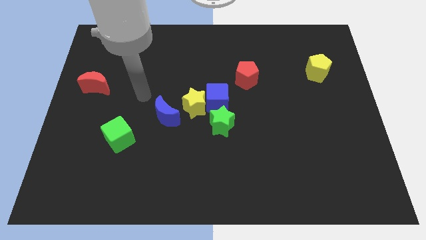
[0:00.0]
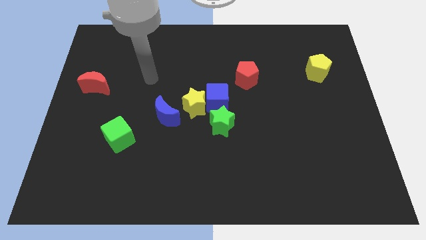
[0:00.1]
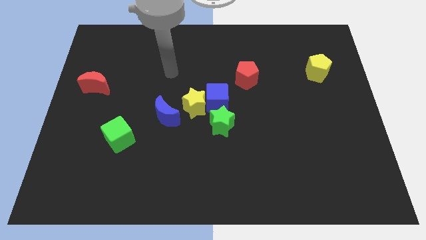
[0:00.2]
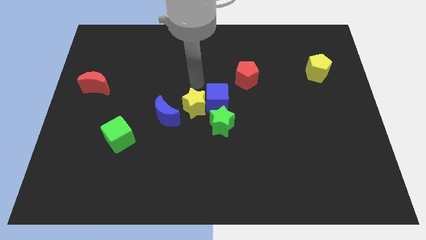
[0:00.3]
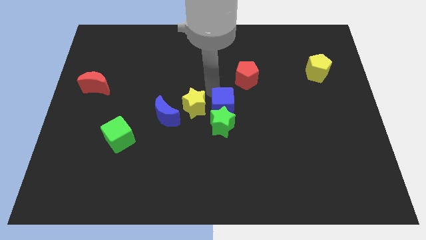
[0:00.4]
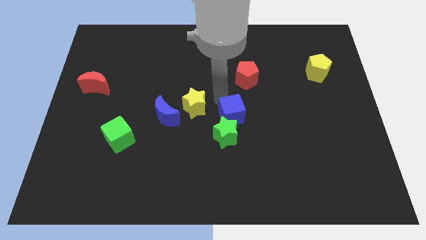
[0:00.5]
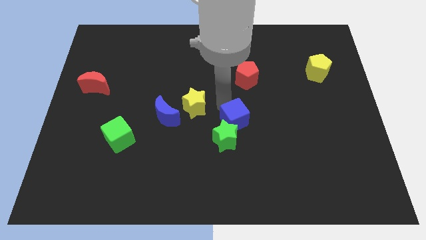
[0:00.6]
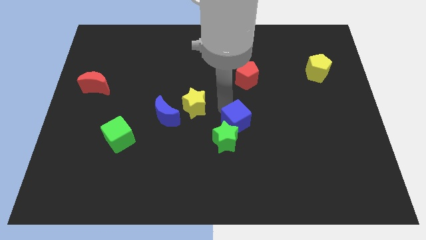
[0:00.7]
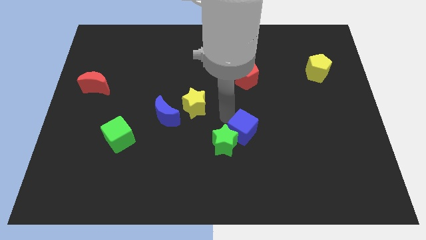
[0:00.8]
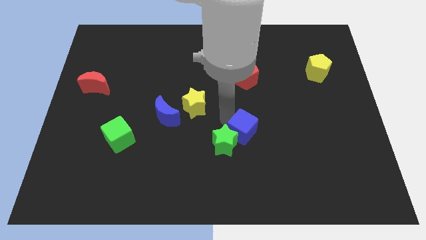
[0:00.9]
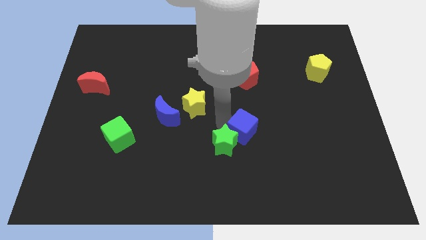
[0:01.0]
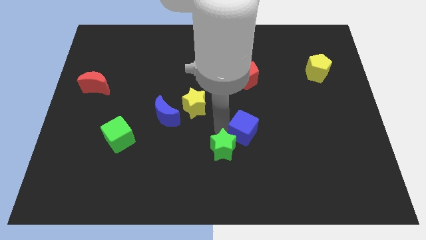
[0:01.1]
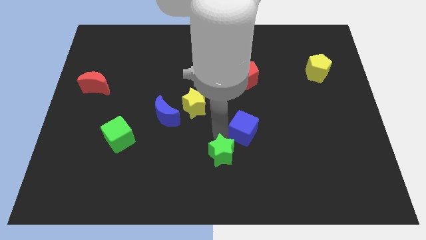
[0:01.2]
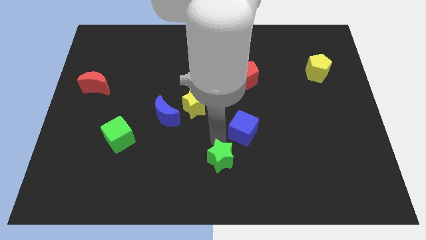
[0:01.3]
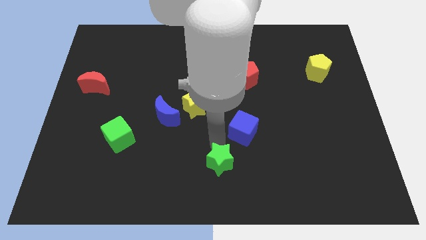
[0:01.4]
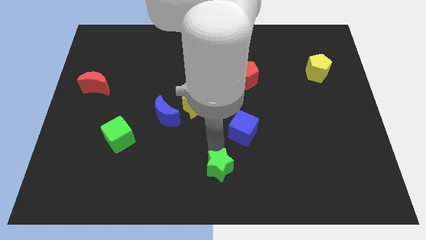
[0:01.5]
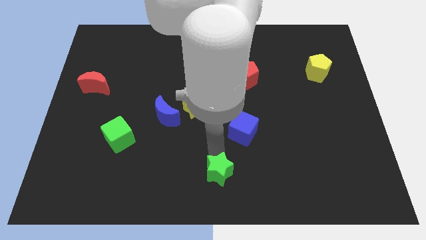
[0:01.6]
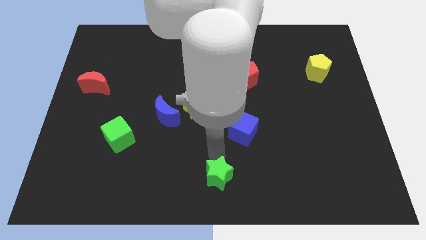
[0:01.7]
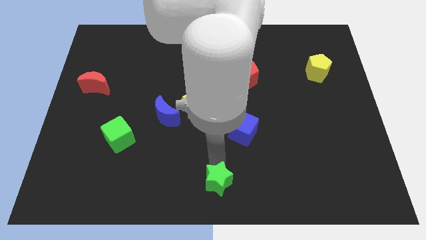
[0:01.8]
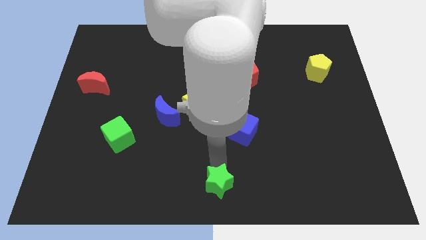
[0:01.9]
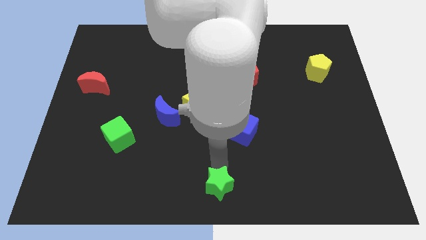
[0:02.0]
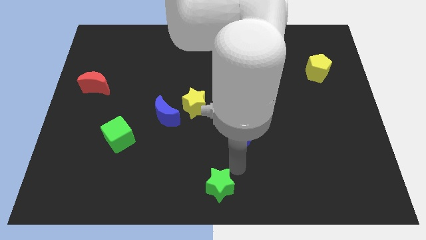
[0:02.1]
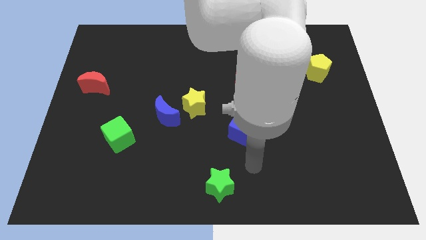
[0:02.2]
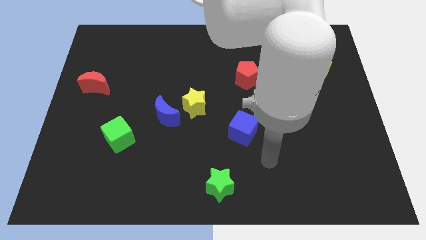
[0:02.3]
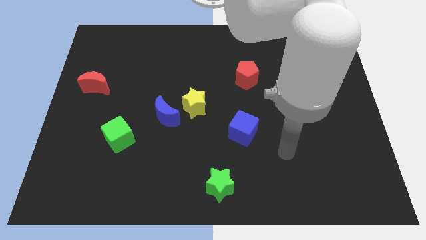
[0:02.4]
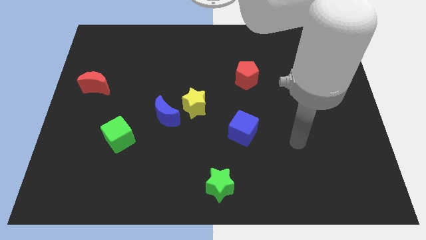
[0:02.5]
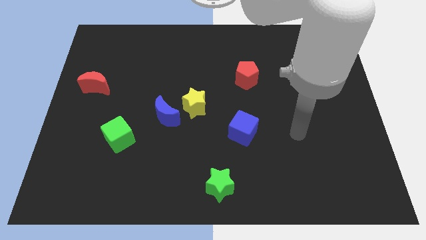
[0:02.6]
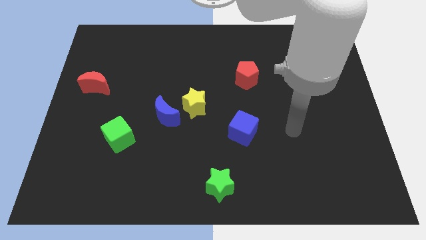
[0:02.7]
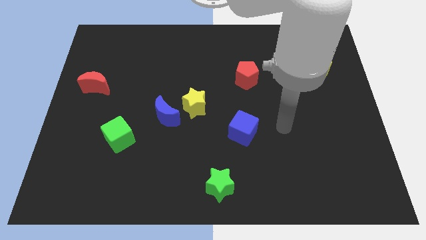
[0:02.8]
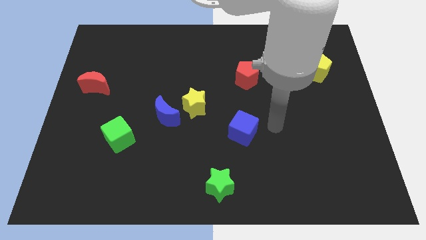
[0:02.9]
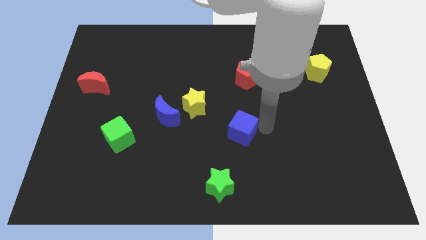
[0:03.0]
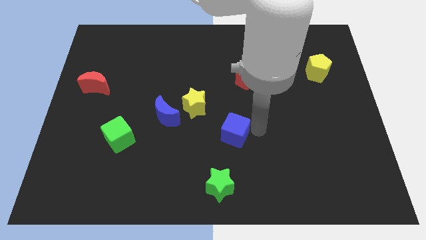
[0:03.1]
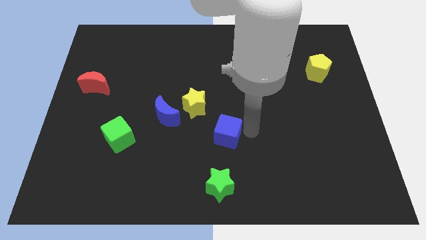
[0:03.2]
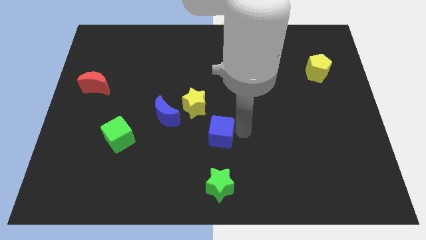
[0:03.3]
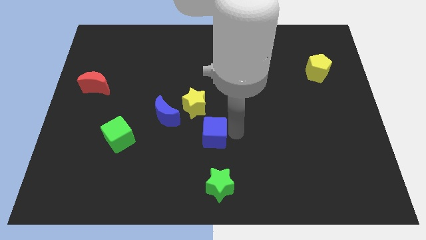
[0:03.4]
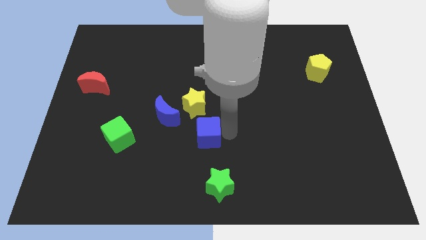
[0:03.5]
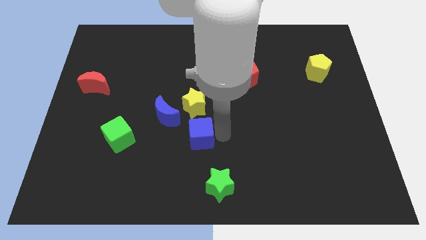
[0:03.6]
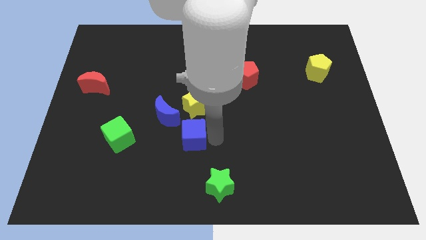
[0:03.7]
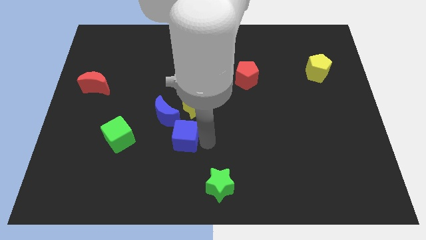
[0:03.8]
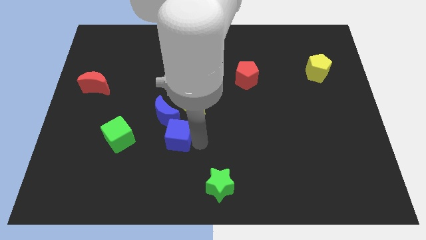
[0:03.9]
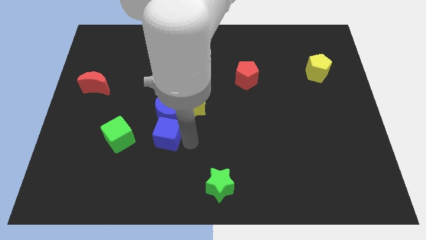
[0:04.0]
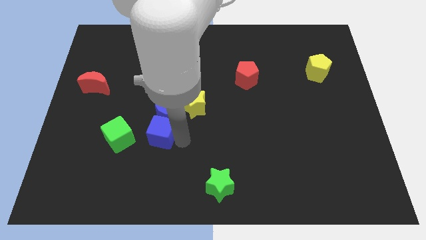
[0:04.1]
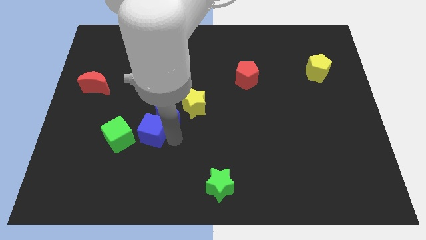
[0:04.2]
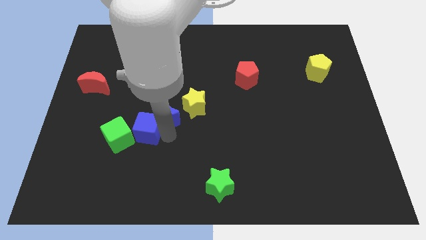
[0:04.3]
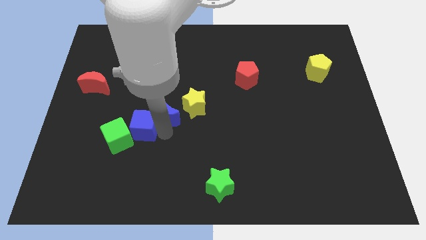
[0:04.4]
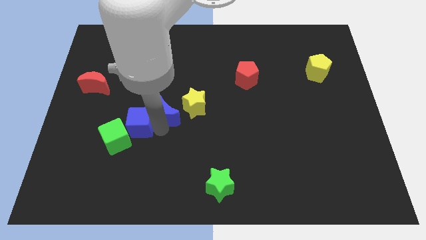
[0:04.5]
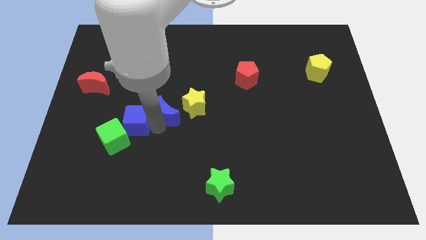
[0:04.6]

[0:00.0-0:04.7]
move the blue cube next to the green cube

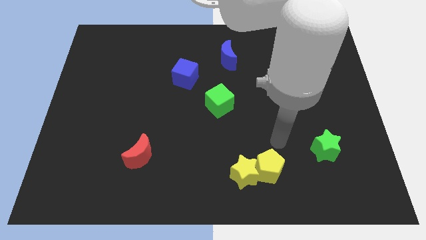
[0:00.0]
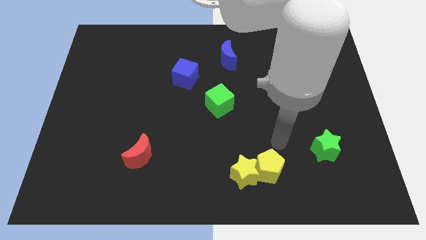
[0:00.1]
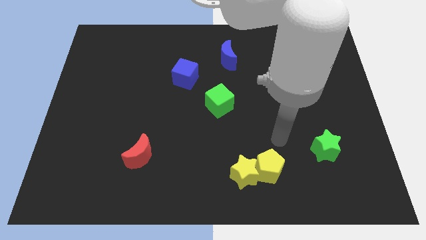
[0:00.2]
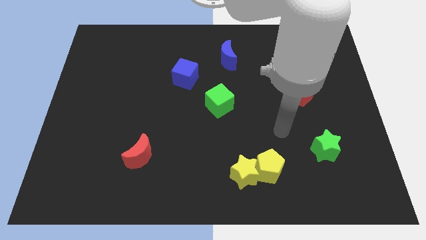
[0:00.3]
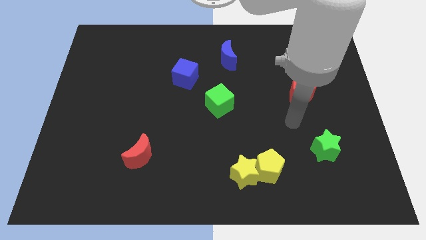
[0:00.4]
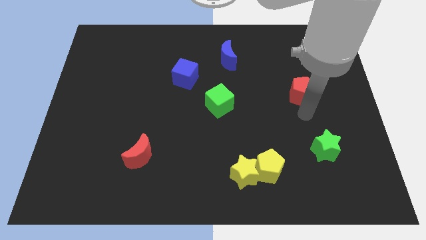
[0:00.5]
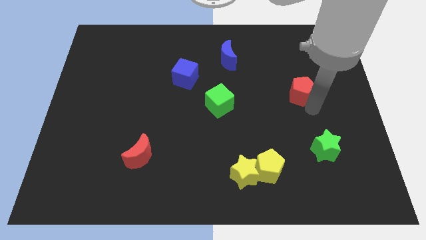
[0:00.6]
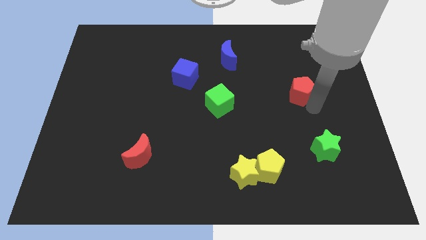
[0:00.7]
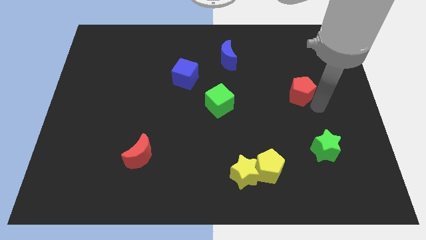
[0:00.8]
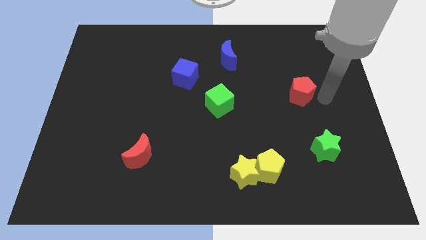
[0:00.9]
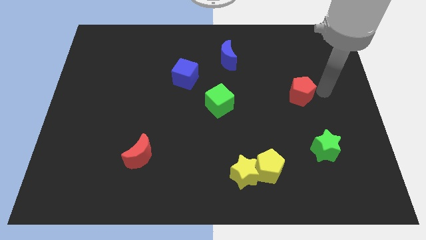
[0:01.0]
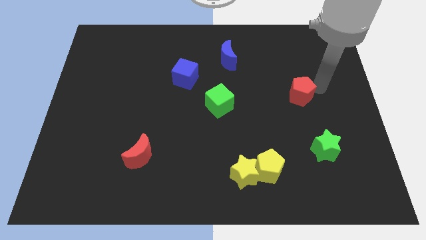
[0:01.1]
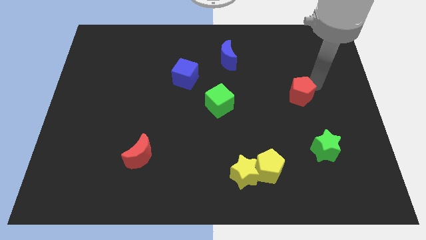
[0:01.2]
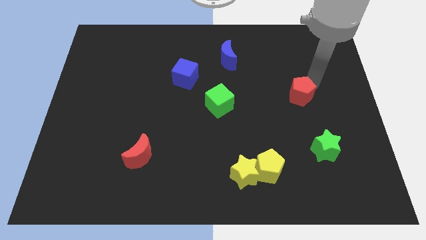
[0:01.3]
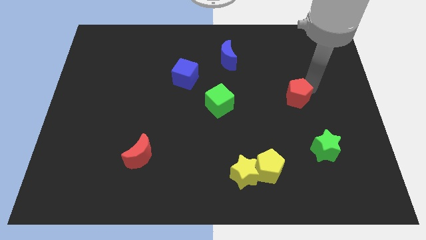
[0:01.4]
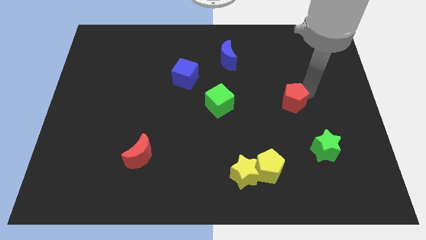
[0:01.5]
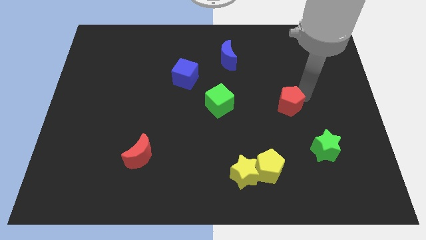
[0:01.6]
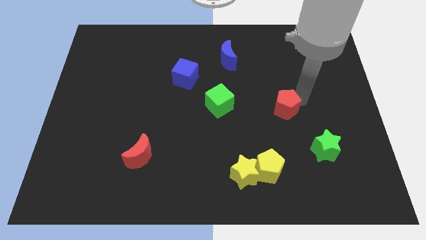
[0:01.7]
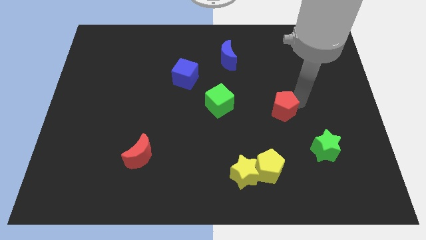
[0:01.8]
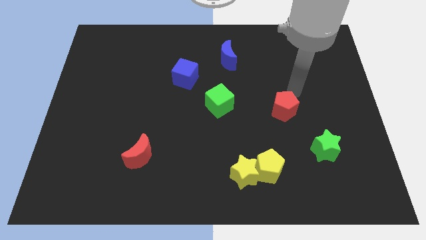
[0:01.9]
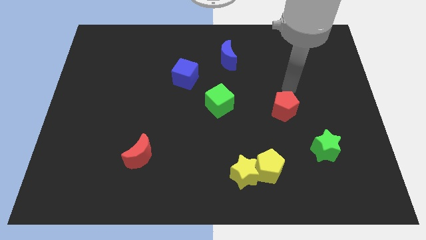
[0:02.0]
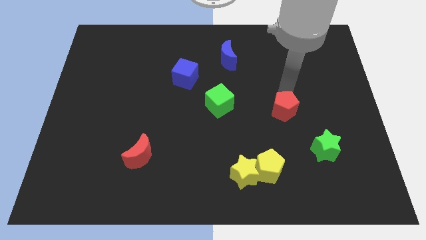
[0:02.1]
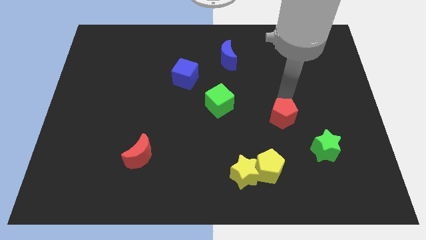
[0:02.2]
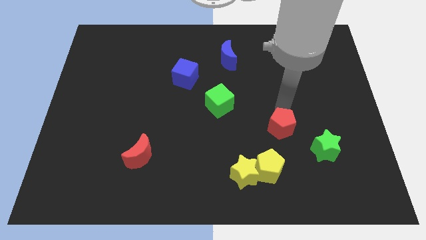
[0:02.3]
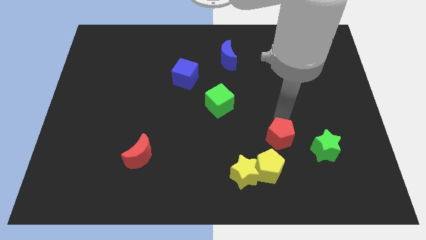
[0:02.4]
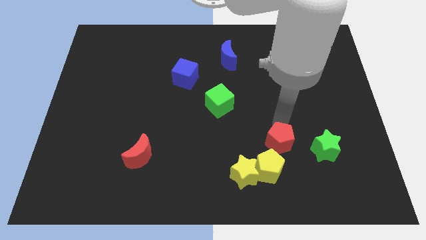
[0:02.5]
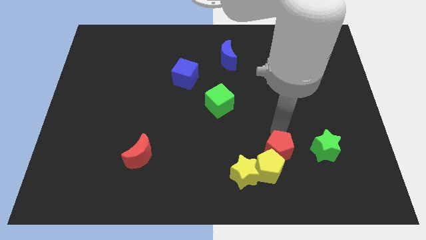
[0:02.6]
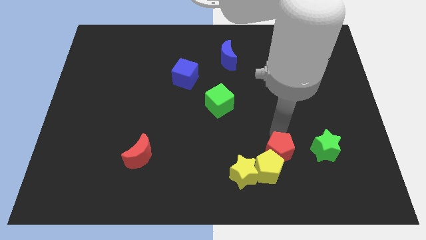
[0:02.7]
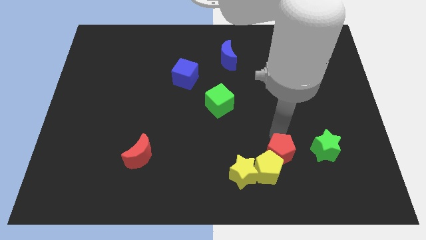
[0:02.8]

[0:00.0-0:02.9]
move the red pentagon towards the yellow pentagon

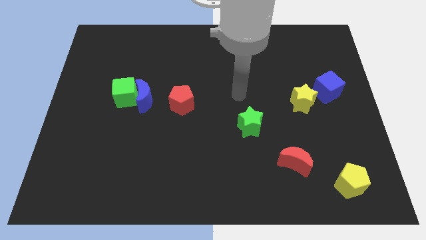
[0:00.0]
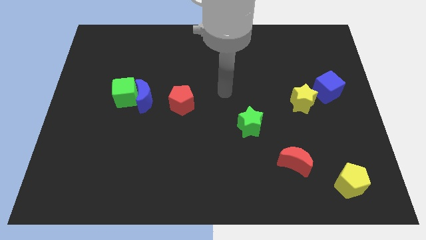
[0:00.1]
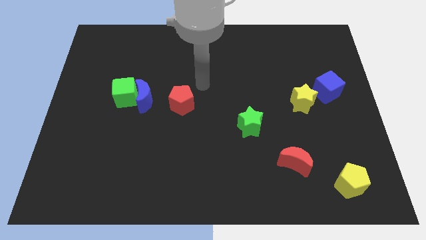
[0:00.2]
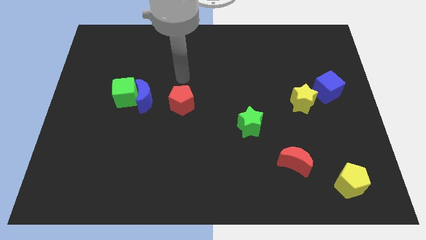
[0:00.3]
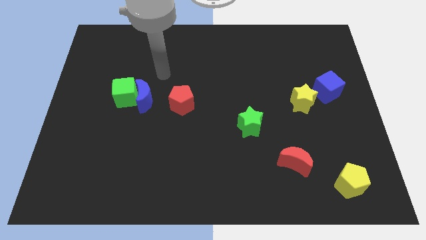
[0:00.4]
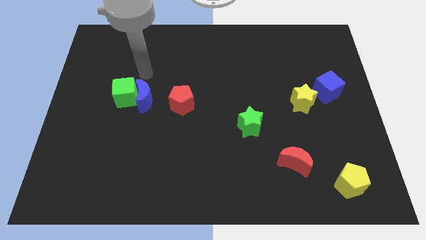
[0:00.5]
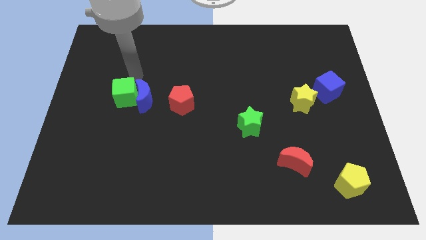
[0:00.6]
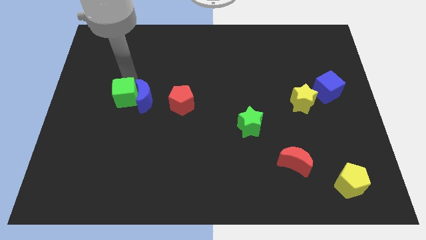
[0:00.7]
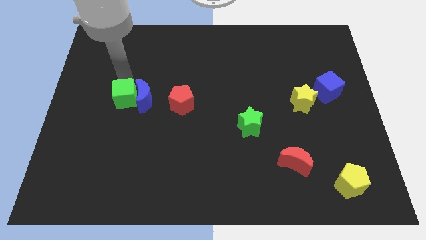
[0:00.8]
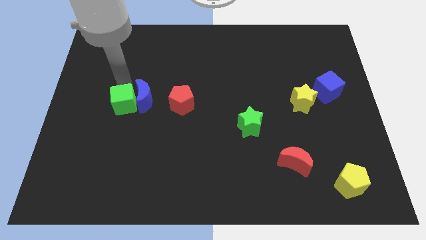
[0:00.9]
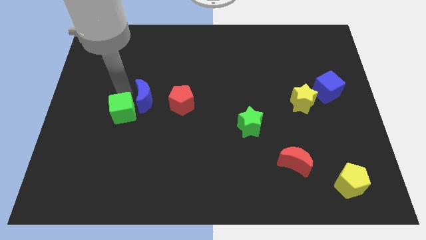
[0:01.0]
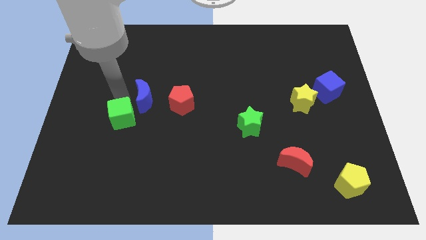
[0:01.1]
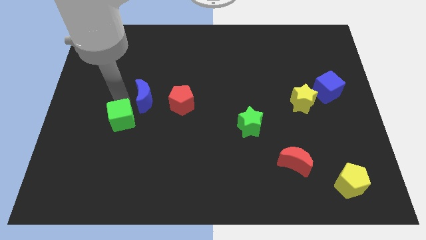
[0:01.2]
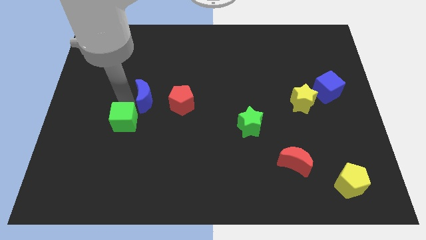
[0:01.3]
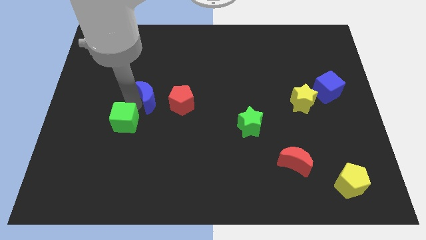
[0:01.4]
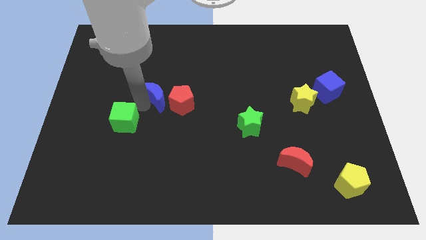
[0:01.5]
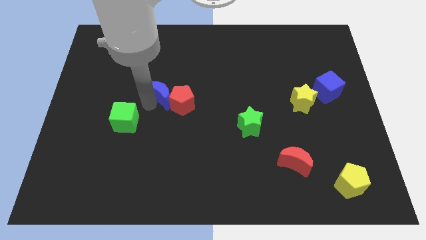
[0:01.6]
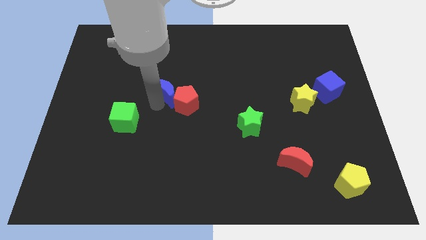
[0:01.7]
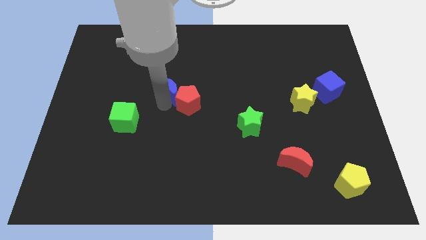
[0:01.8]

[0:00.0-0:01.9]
push the blue moon next to the red pentagon
